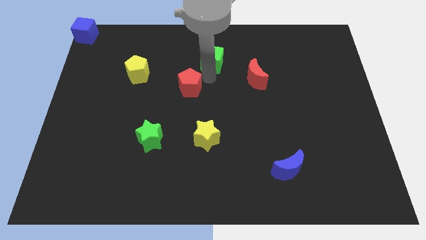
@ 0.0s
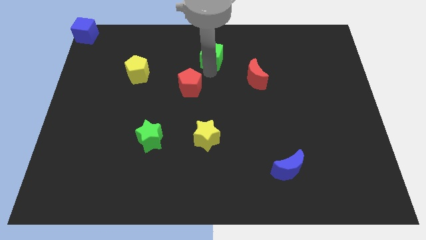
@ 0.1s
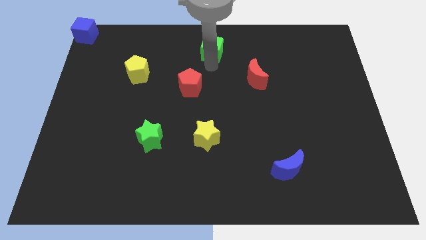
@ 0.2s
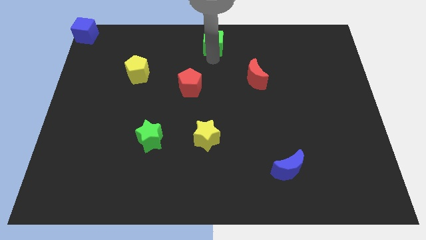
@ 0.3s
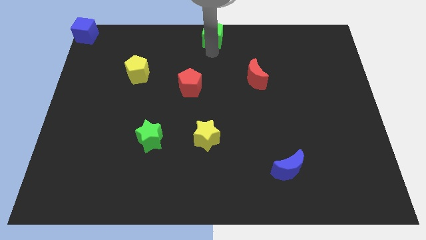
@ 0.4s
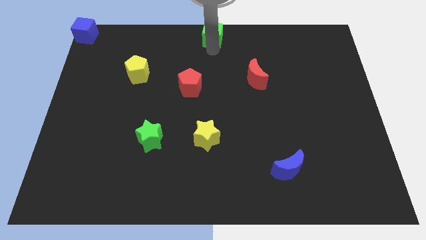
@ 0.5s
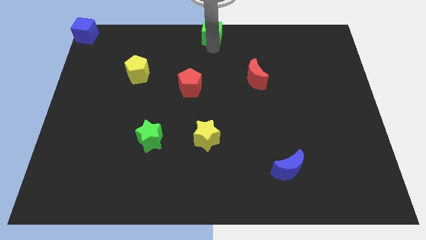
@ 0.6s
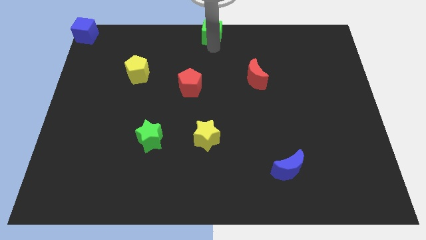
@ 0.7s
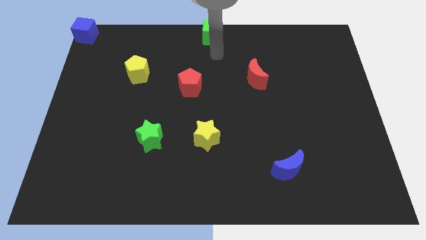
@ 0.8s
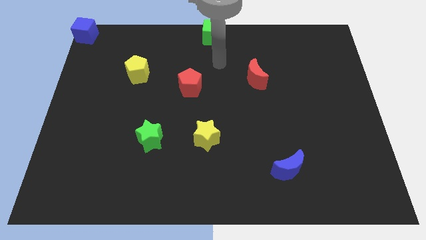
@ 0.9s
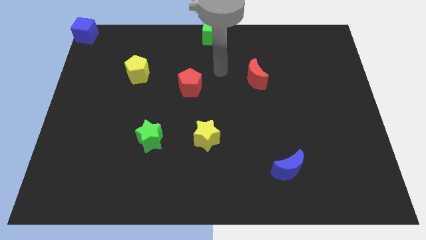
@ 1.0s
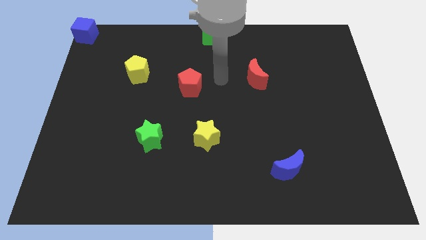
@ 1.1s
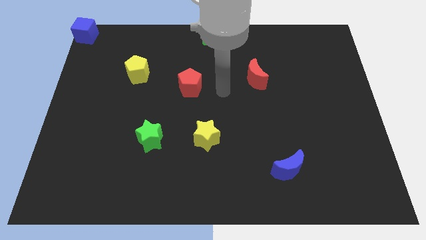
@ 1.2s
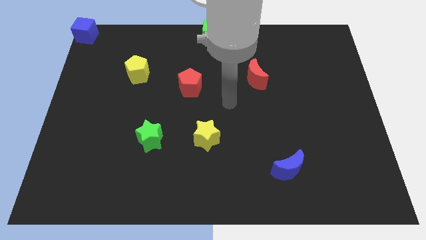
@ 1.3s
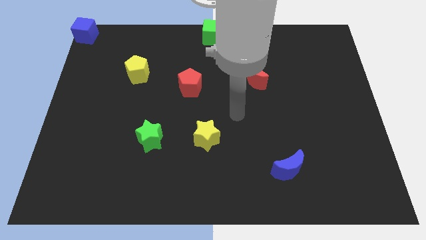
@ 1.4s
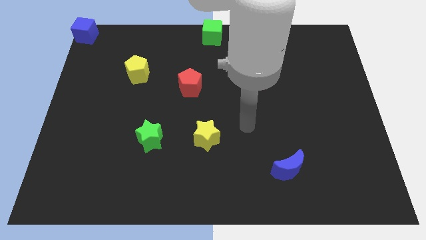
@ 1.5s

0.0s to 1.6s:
push the green cube to the top center of the board

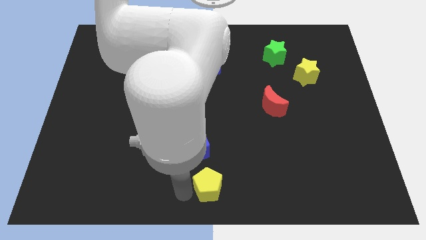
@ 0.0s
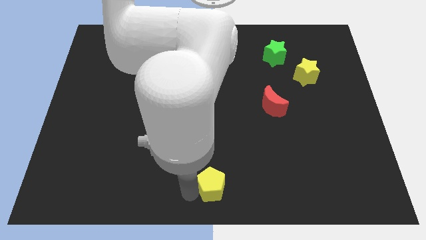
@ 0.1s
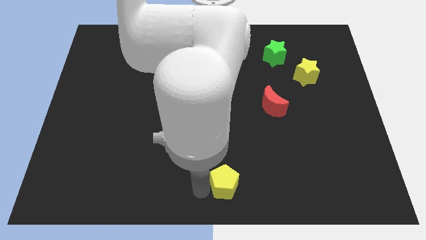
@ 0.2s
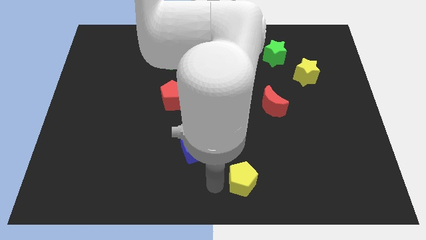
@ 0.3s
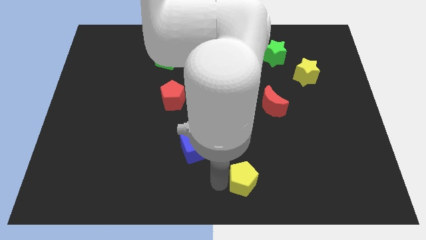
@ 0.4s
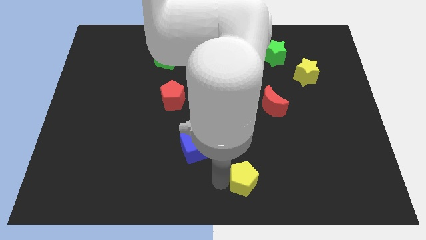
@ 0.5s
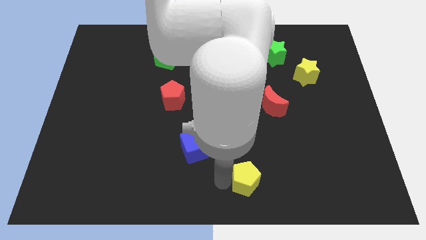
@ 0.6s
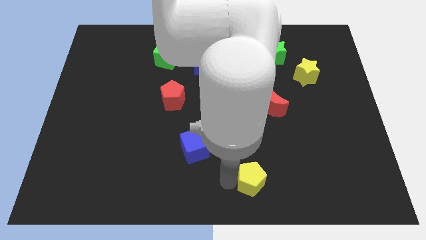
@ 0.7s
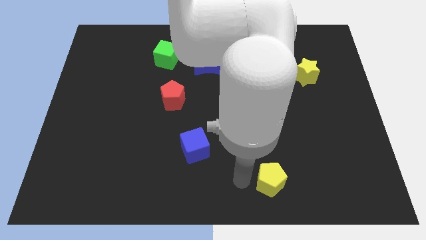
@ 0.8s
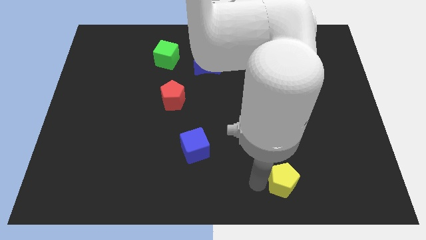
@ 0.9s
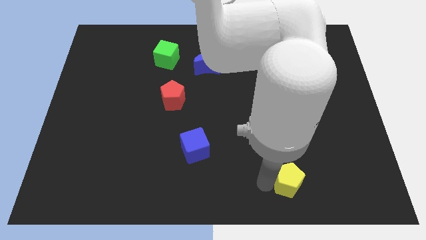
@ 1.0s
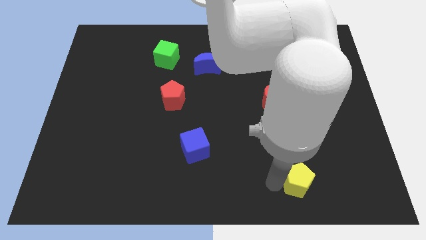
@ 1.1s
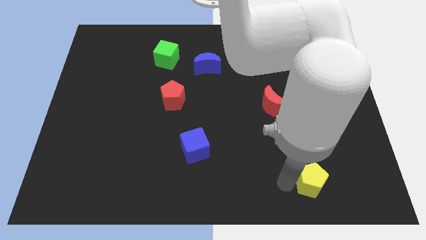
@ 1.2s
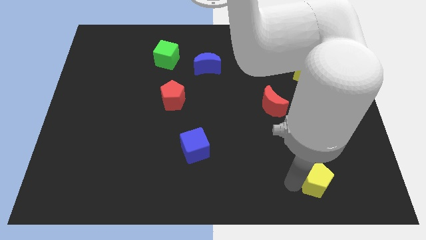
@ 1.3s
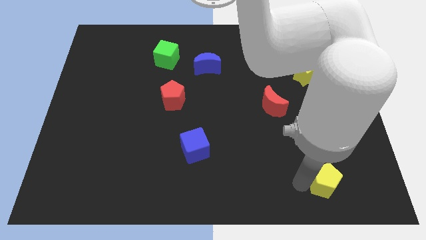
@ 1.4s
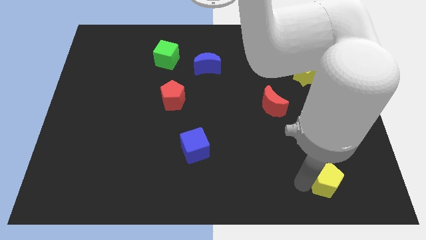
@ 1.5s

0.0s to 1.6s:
push the yellow pentagon towards the bottom right corner of the board

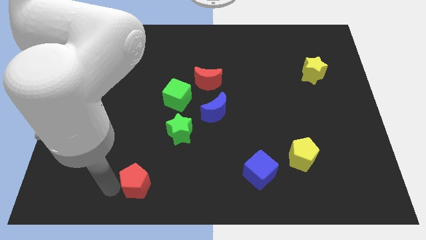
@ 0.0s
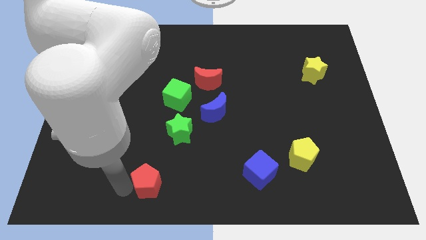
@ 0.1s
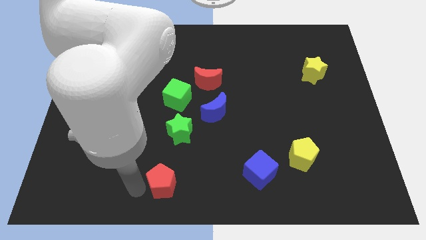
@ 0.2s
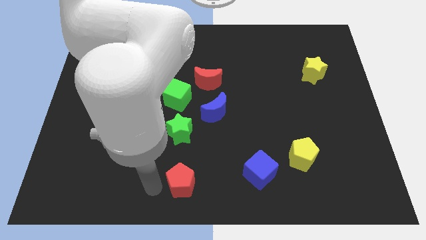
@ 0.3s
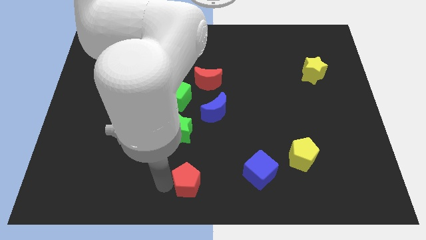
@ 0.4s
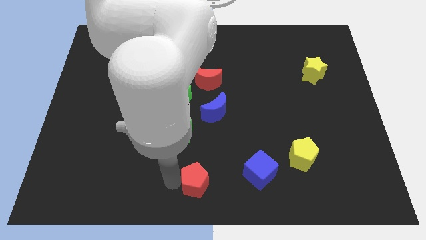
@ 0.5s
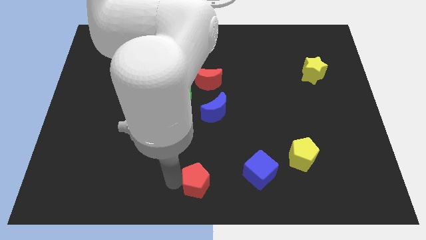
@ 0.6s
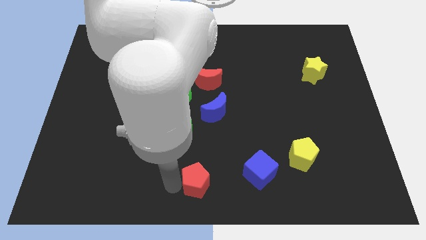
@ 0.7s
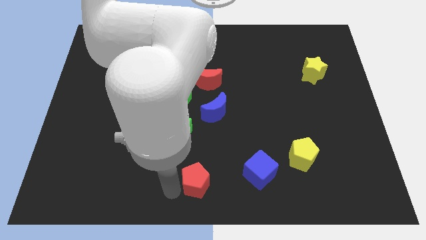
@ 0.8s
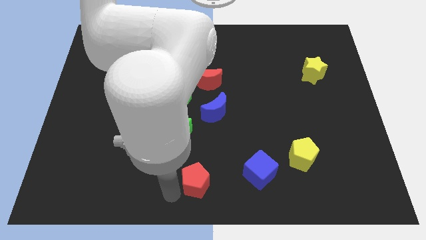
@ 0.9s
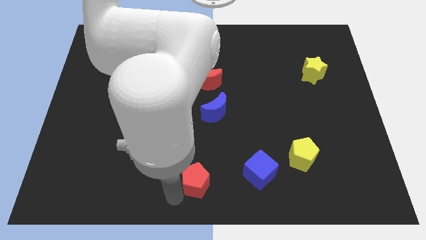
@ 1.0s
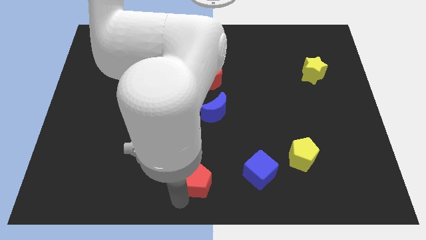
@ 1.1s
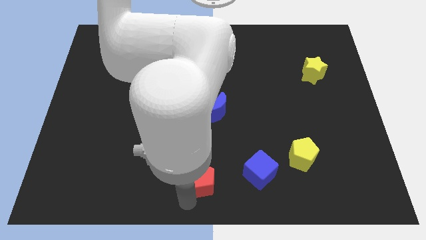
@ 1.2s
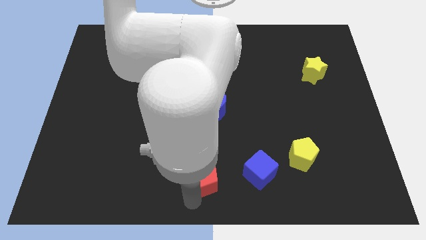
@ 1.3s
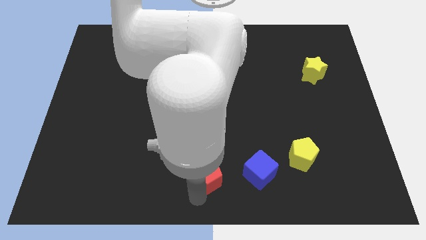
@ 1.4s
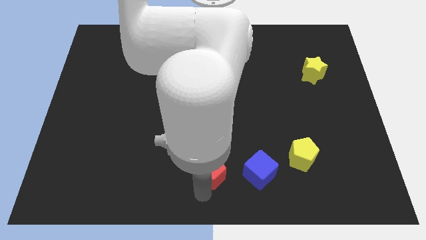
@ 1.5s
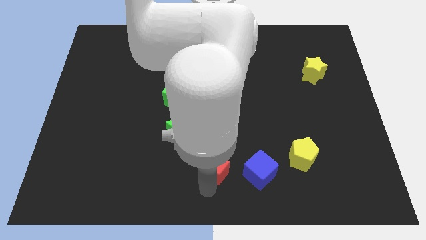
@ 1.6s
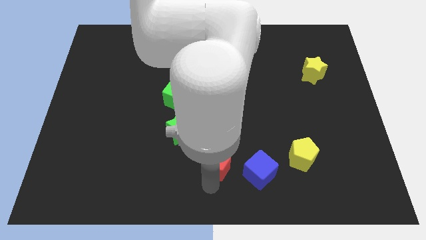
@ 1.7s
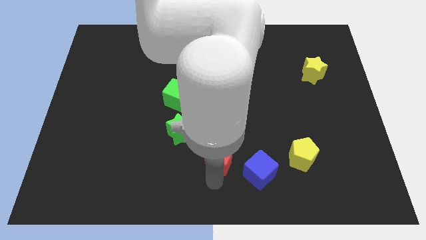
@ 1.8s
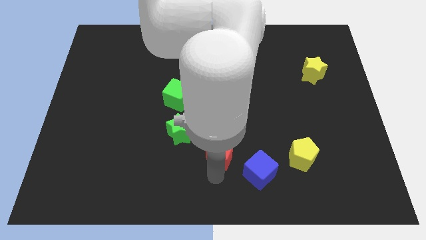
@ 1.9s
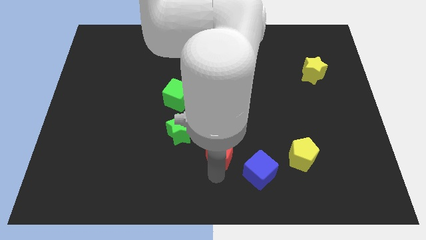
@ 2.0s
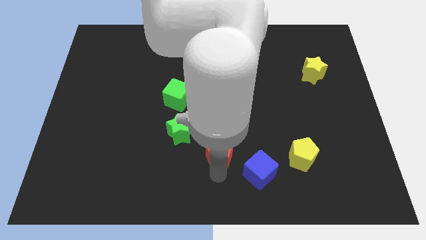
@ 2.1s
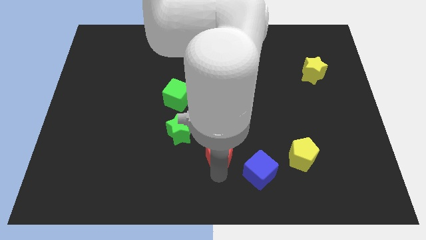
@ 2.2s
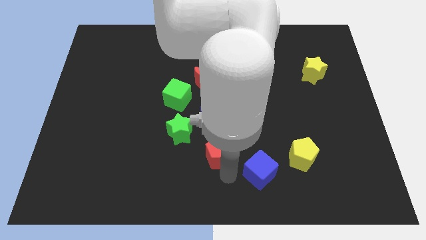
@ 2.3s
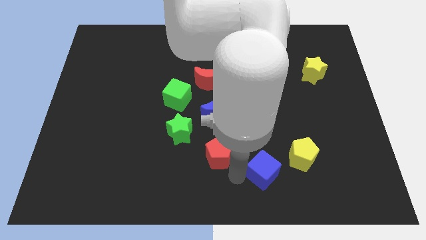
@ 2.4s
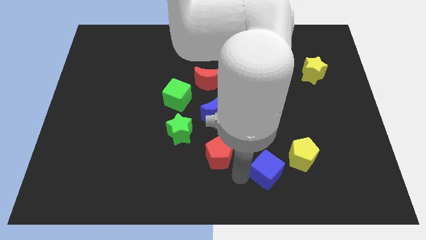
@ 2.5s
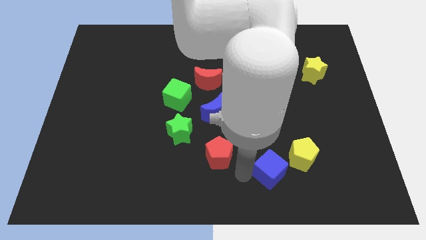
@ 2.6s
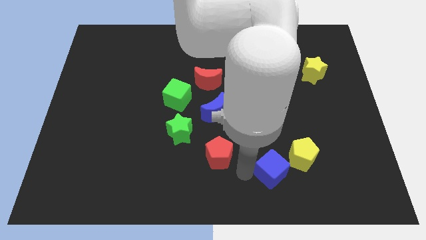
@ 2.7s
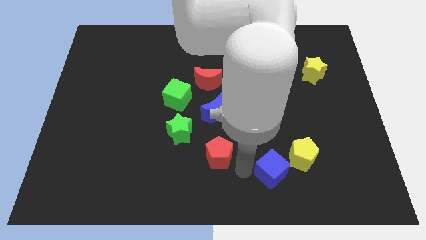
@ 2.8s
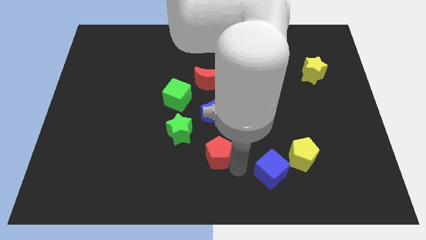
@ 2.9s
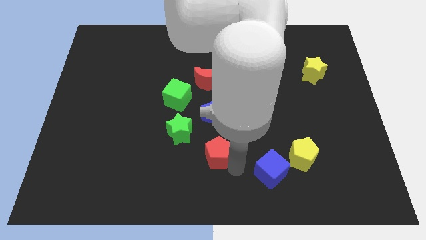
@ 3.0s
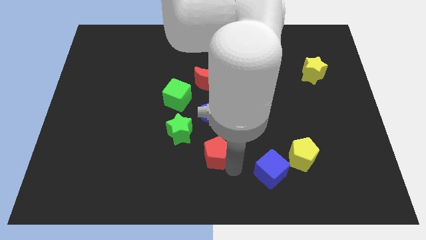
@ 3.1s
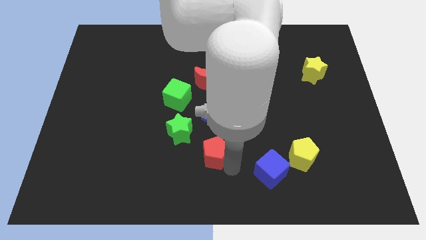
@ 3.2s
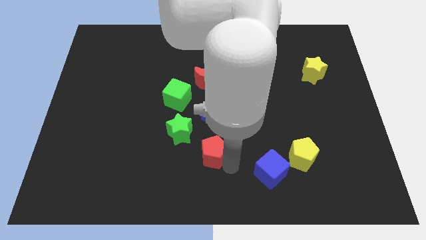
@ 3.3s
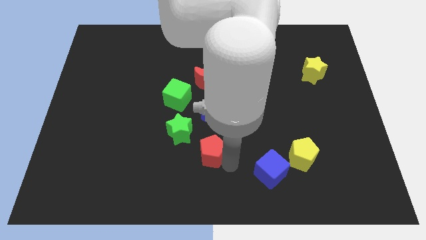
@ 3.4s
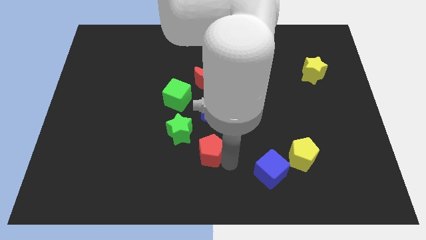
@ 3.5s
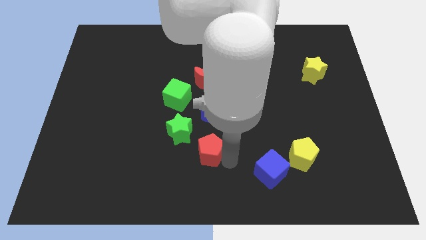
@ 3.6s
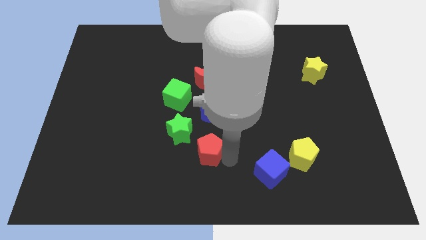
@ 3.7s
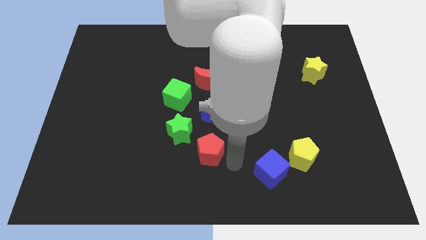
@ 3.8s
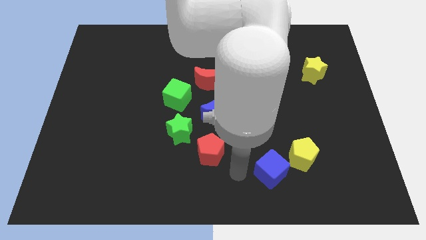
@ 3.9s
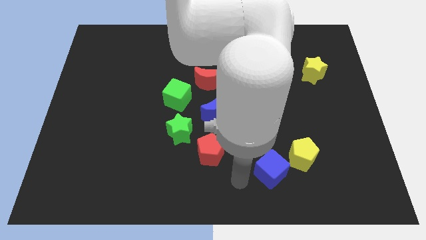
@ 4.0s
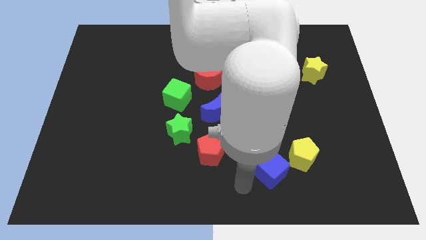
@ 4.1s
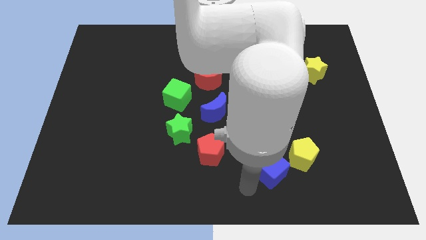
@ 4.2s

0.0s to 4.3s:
place the red pentagon below the blue moon

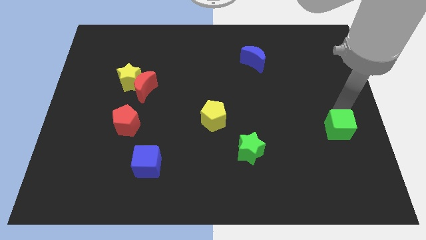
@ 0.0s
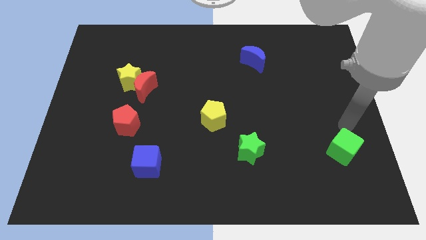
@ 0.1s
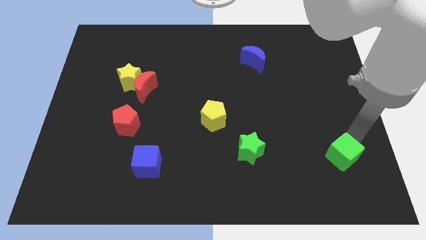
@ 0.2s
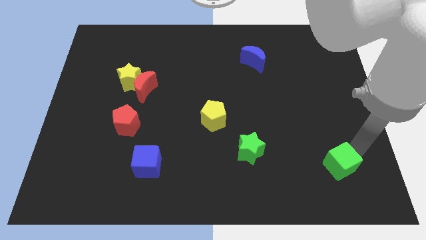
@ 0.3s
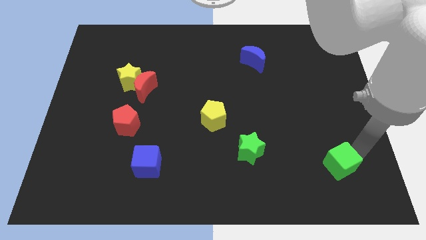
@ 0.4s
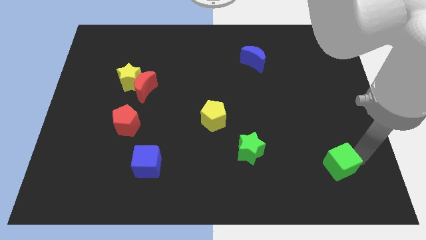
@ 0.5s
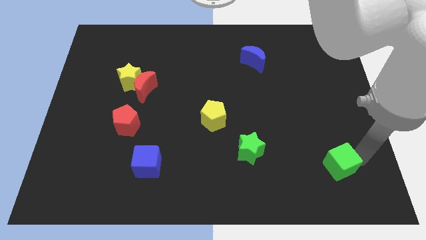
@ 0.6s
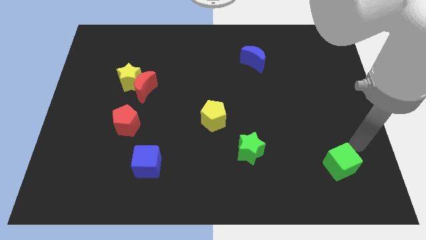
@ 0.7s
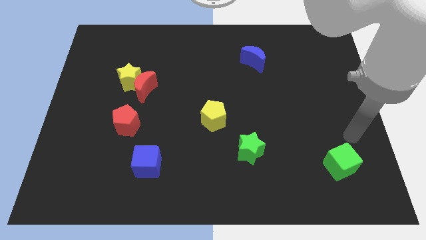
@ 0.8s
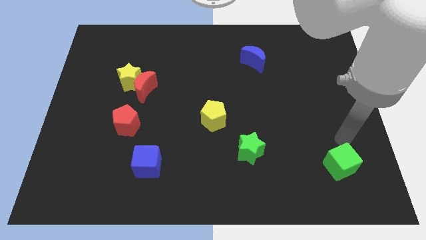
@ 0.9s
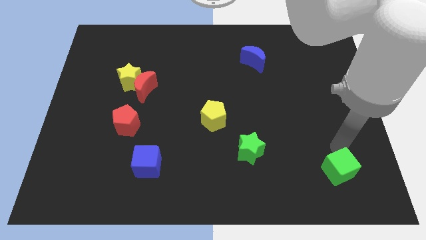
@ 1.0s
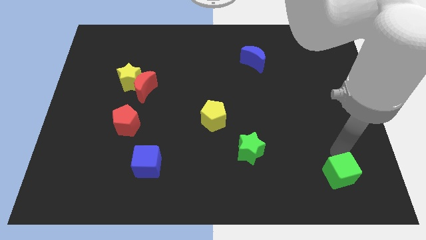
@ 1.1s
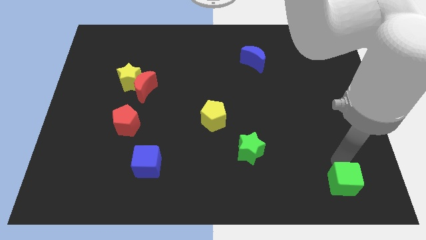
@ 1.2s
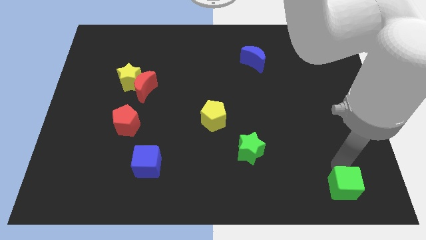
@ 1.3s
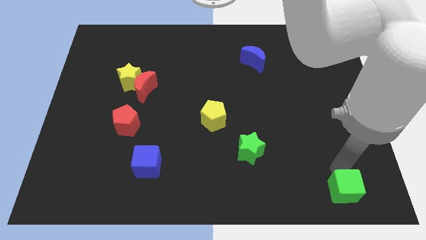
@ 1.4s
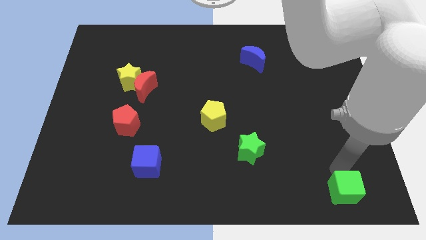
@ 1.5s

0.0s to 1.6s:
place green cube at bottom
